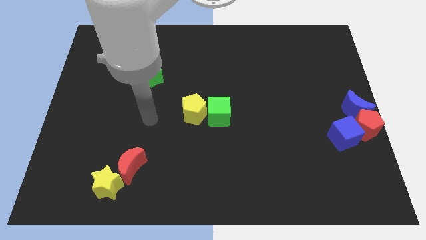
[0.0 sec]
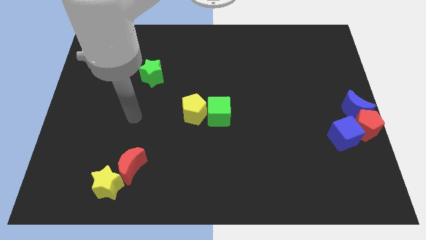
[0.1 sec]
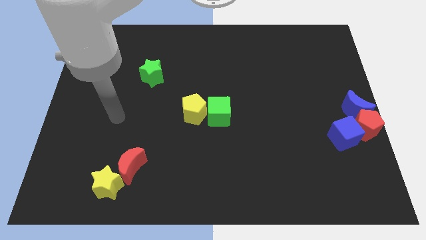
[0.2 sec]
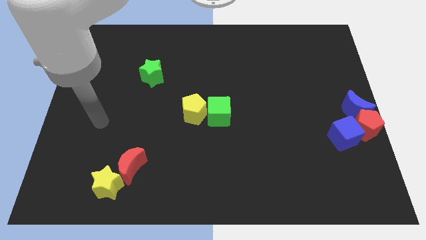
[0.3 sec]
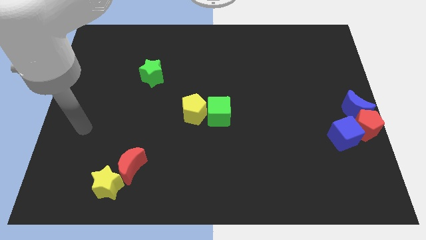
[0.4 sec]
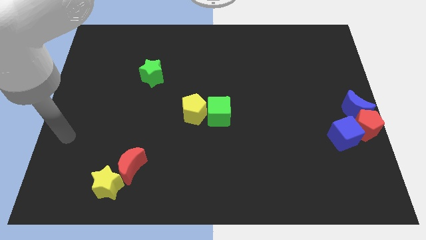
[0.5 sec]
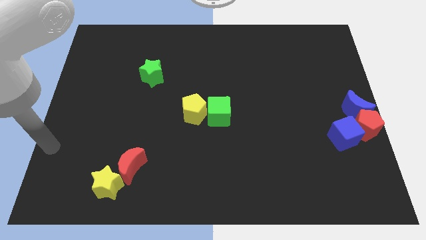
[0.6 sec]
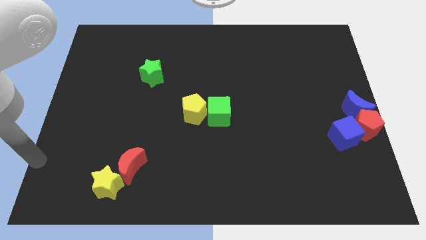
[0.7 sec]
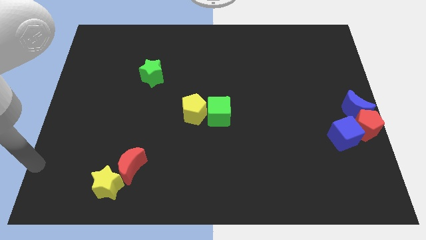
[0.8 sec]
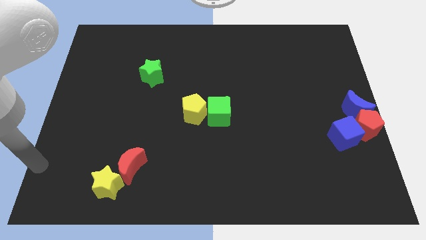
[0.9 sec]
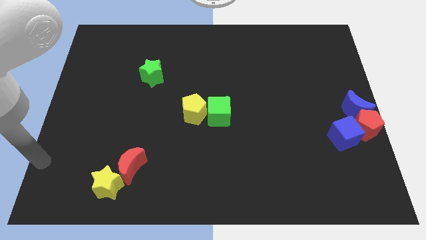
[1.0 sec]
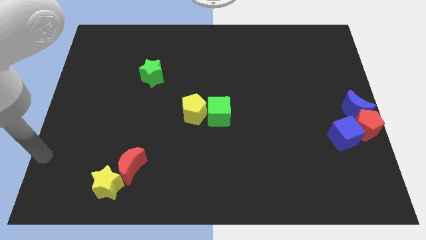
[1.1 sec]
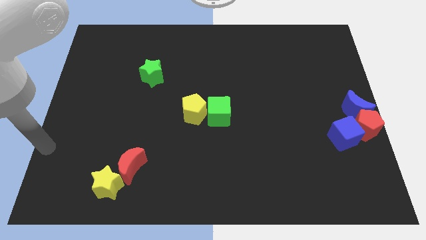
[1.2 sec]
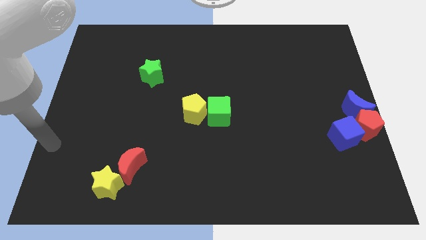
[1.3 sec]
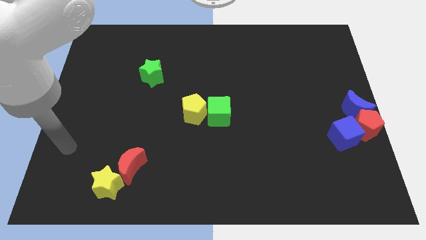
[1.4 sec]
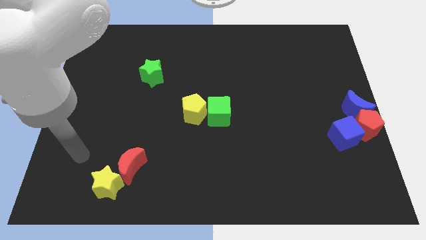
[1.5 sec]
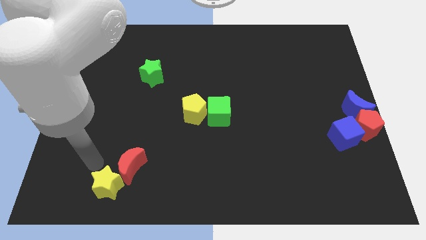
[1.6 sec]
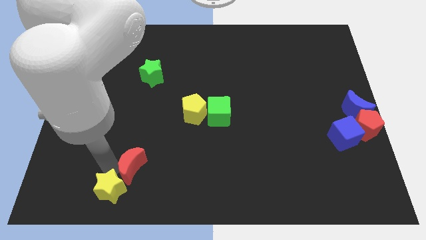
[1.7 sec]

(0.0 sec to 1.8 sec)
tap the yellow star

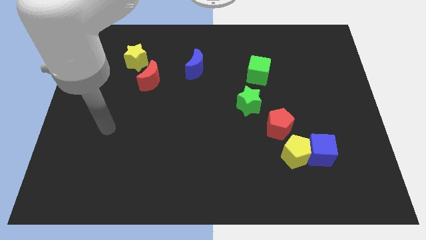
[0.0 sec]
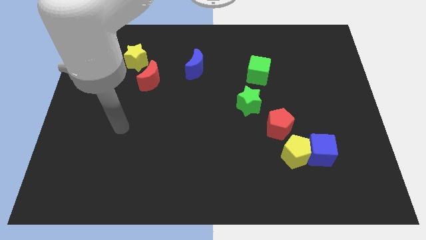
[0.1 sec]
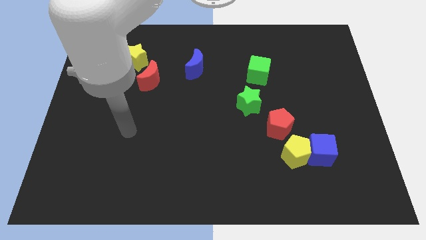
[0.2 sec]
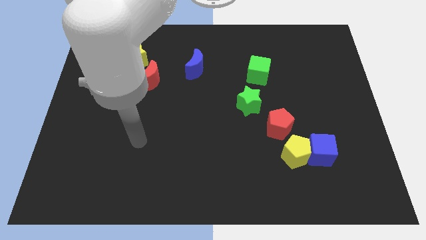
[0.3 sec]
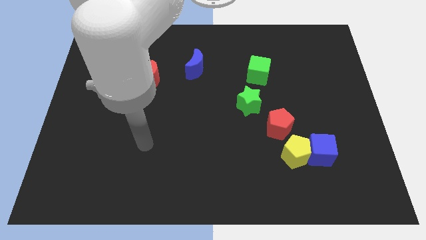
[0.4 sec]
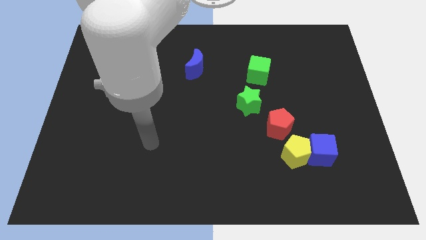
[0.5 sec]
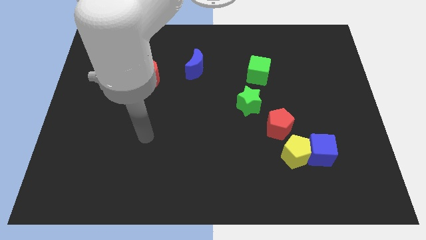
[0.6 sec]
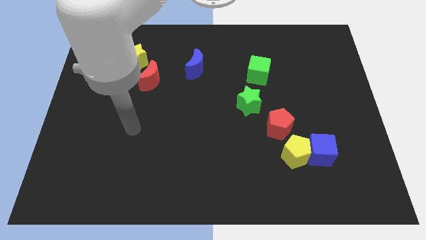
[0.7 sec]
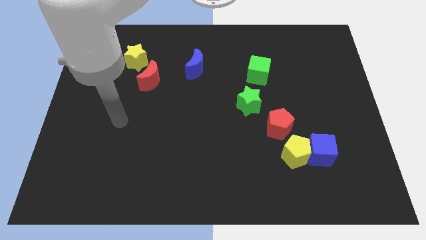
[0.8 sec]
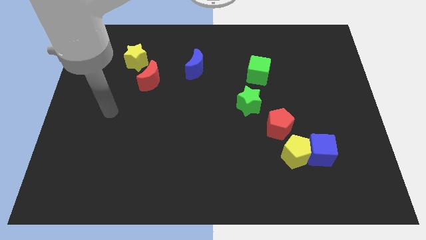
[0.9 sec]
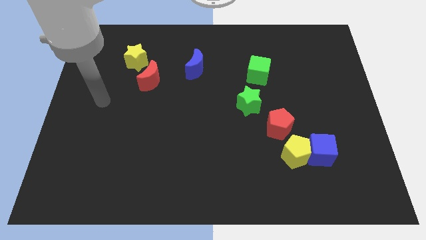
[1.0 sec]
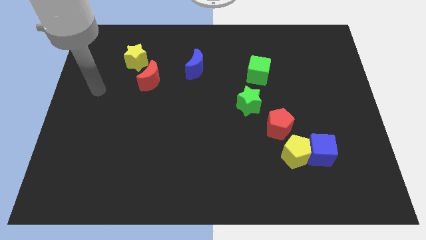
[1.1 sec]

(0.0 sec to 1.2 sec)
place your hand to the left of the red crescent

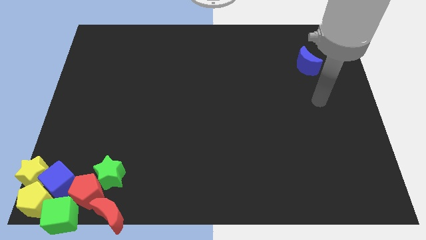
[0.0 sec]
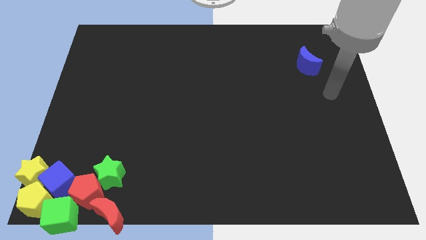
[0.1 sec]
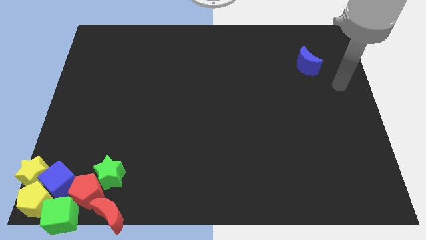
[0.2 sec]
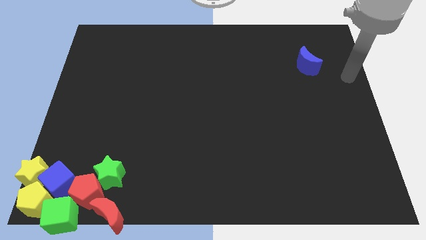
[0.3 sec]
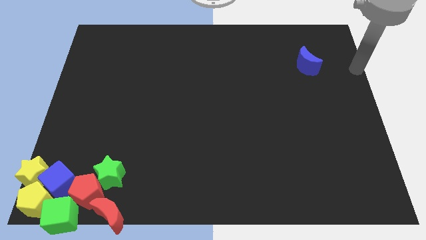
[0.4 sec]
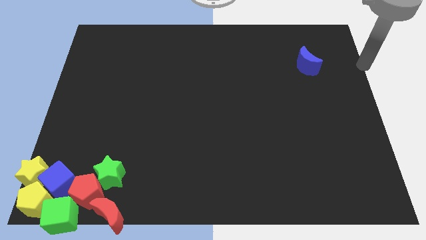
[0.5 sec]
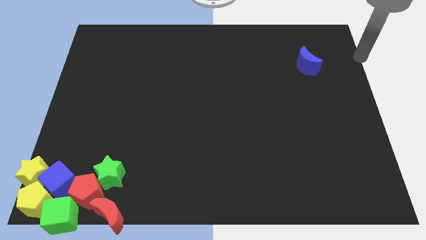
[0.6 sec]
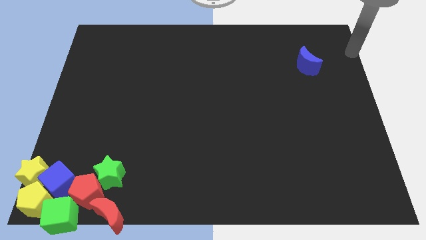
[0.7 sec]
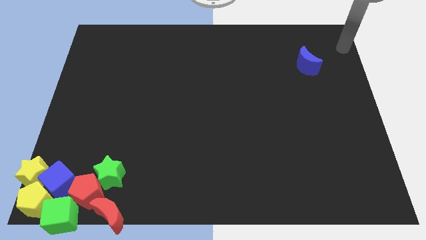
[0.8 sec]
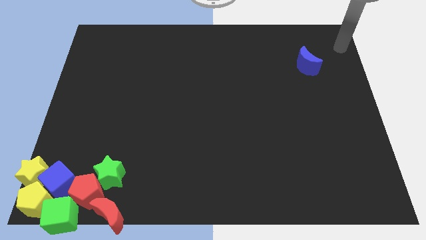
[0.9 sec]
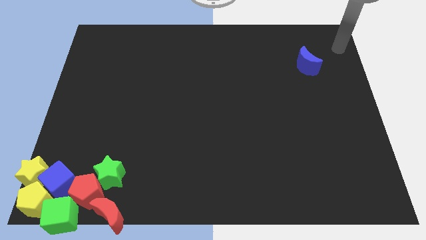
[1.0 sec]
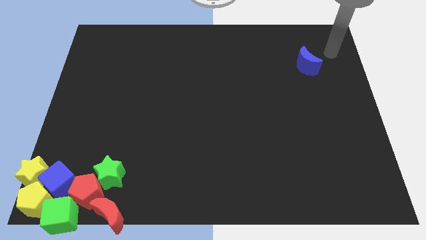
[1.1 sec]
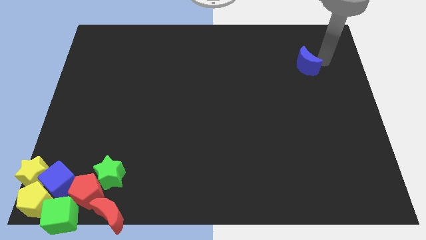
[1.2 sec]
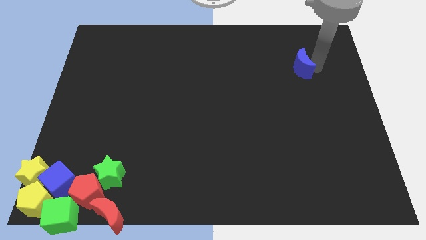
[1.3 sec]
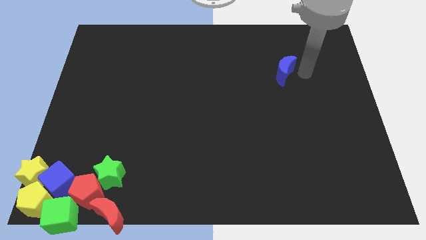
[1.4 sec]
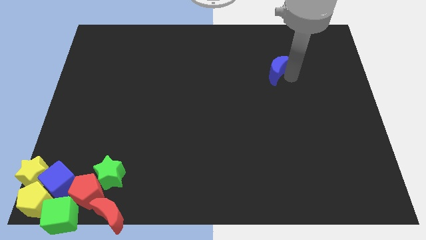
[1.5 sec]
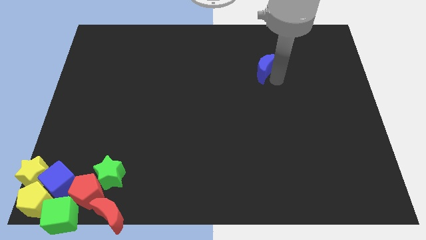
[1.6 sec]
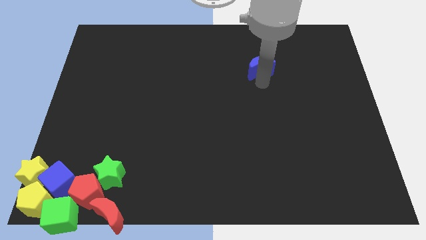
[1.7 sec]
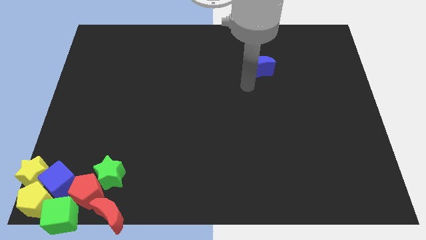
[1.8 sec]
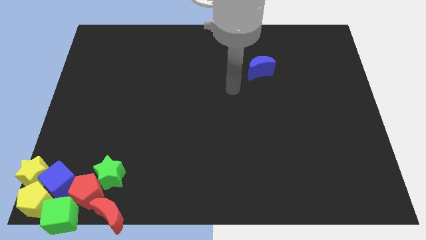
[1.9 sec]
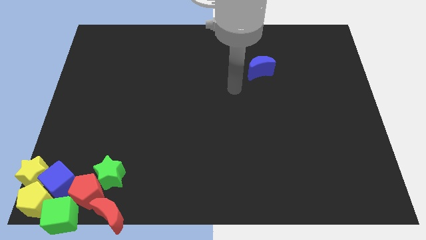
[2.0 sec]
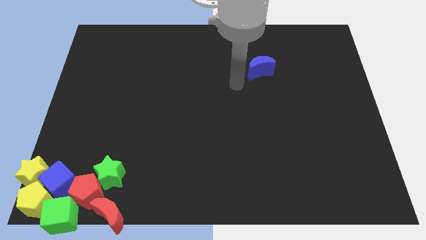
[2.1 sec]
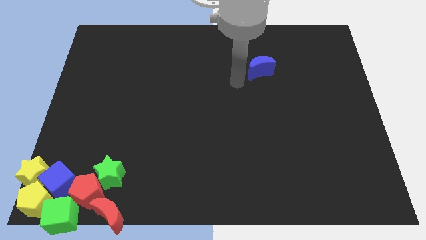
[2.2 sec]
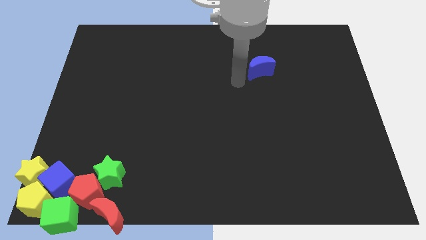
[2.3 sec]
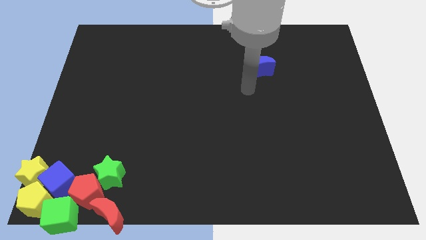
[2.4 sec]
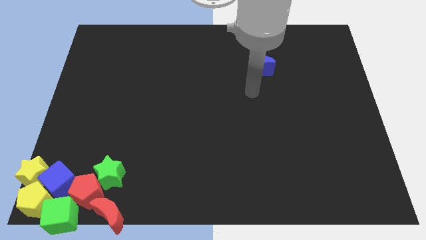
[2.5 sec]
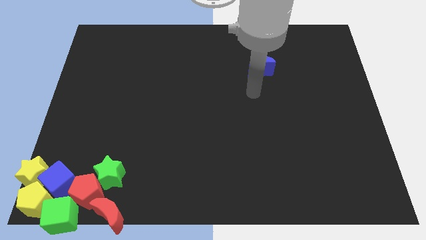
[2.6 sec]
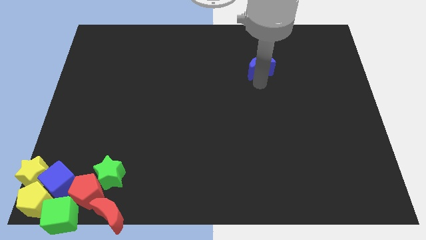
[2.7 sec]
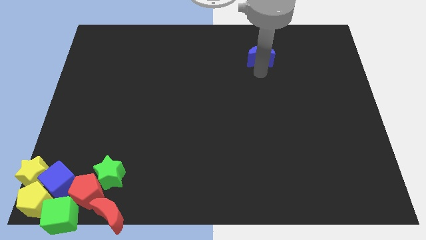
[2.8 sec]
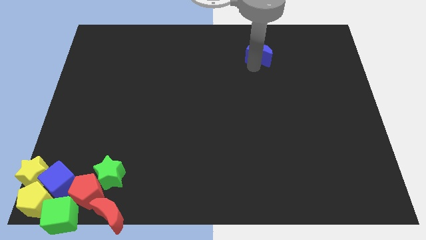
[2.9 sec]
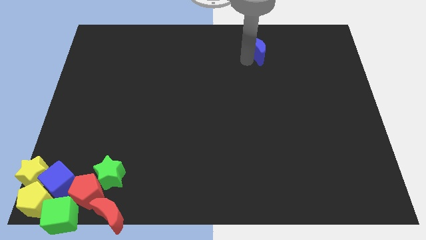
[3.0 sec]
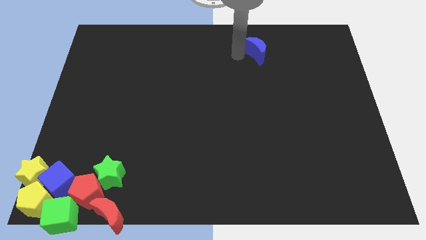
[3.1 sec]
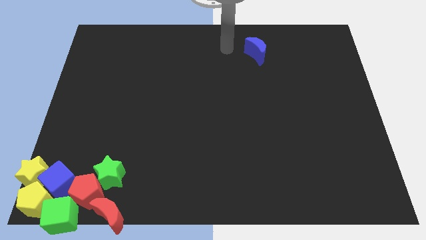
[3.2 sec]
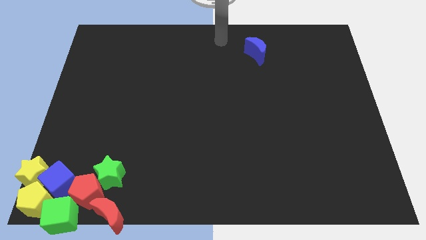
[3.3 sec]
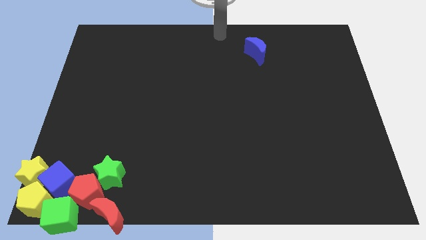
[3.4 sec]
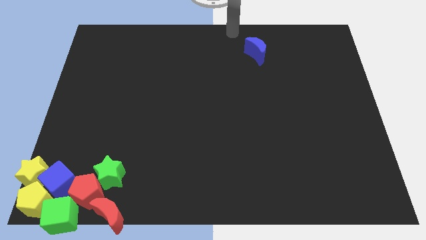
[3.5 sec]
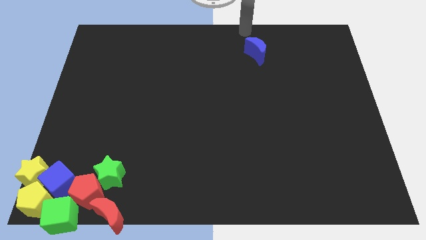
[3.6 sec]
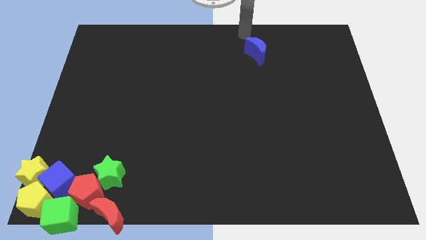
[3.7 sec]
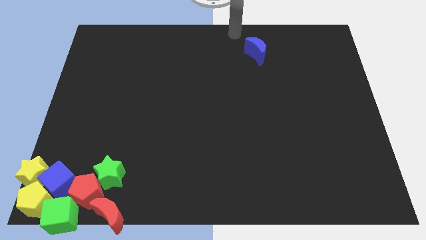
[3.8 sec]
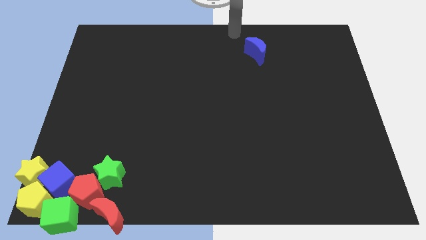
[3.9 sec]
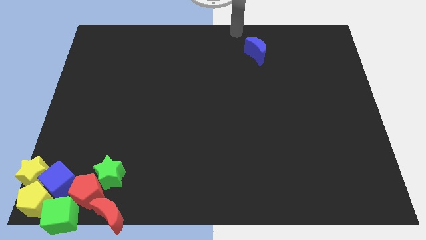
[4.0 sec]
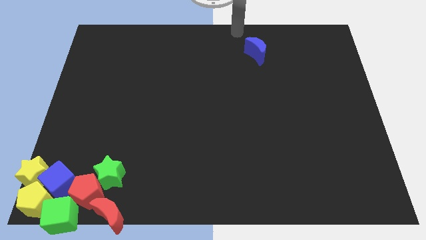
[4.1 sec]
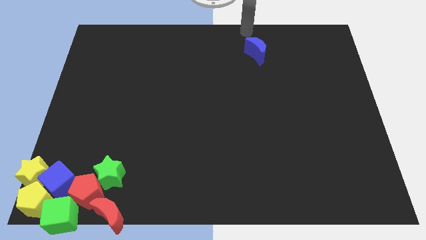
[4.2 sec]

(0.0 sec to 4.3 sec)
push the blue crescent towards the top centre

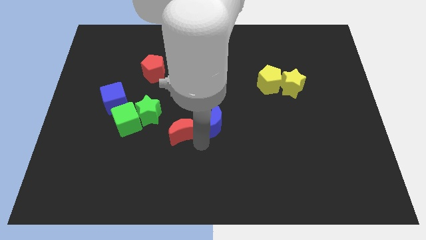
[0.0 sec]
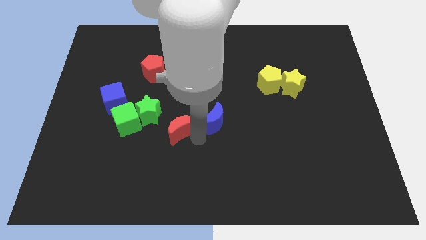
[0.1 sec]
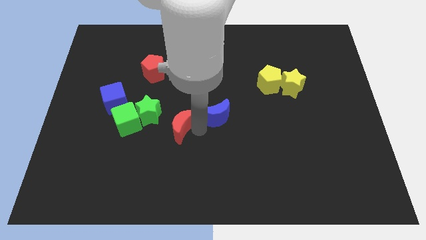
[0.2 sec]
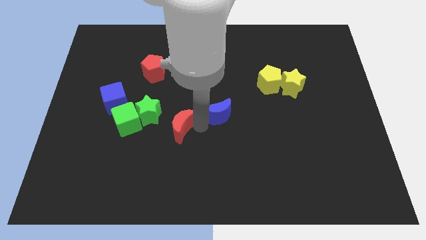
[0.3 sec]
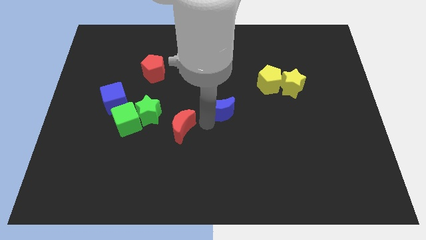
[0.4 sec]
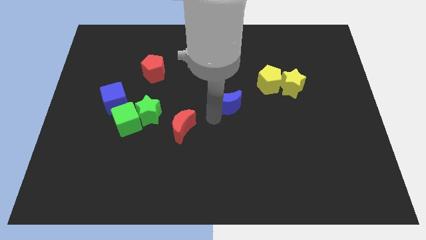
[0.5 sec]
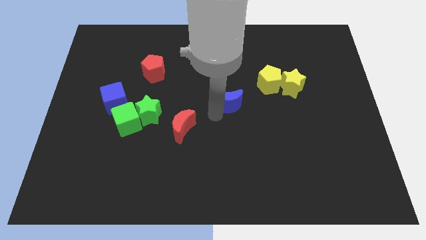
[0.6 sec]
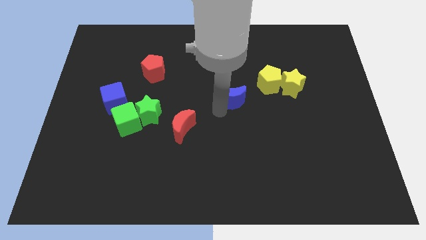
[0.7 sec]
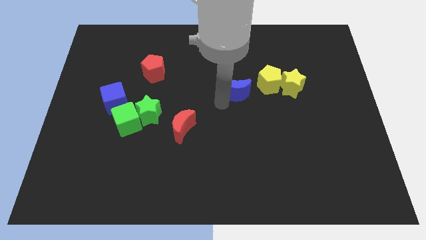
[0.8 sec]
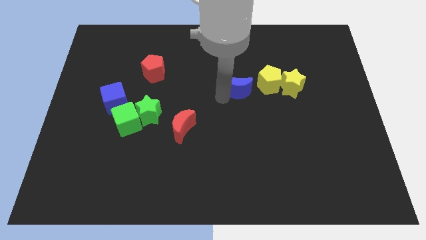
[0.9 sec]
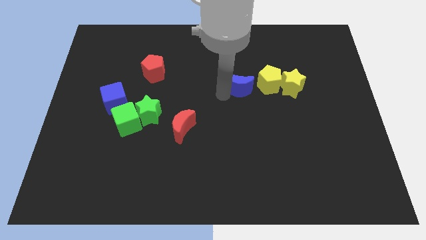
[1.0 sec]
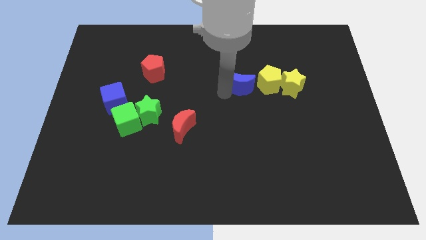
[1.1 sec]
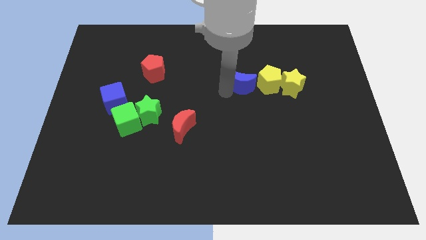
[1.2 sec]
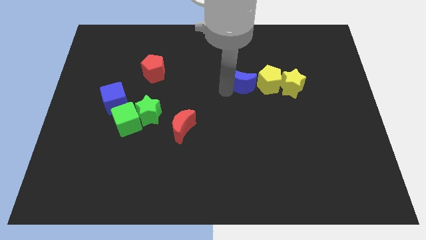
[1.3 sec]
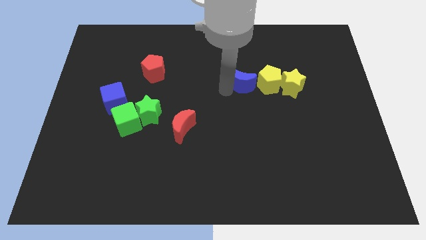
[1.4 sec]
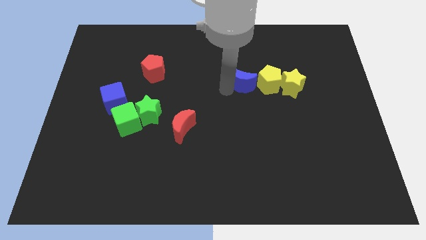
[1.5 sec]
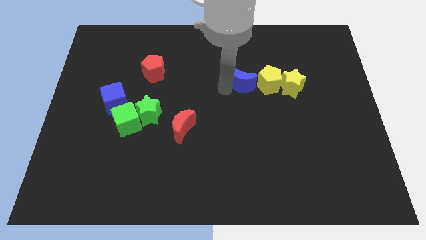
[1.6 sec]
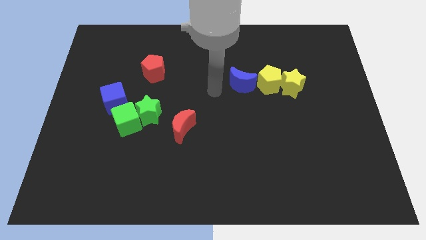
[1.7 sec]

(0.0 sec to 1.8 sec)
place blue moon to the left side of the yellow pentagon
